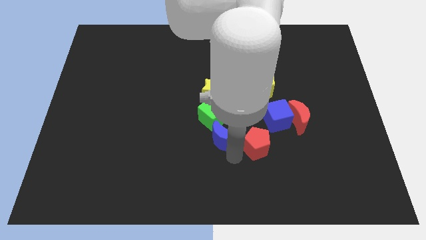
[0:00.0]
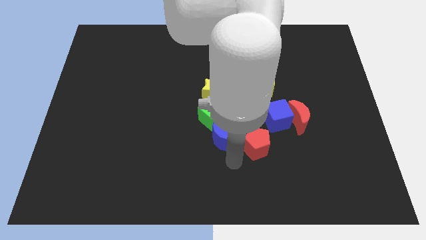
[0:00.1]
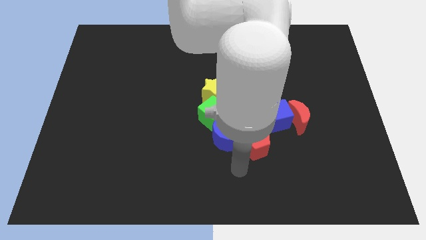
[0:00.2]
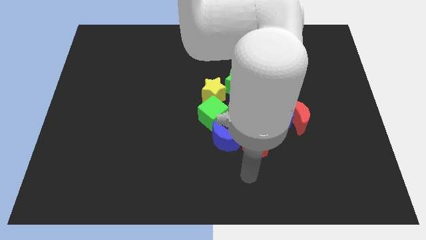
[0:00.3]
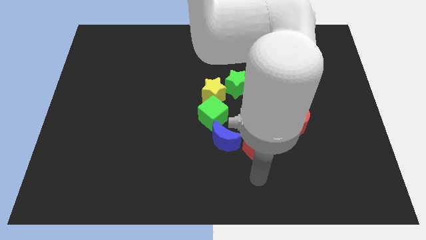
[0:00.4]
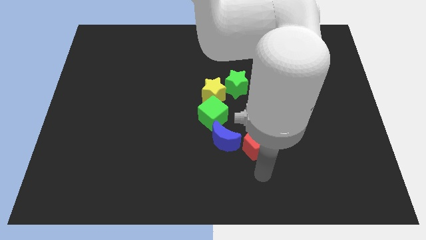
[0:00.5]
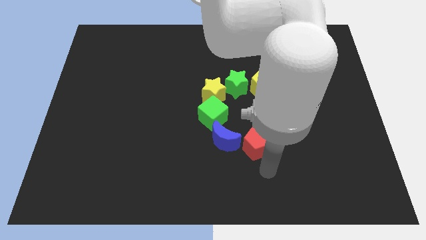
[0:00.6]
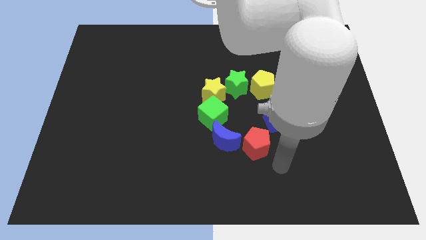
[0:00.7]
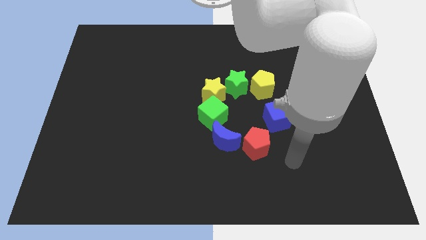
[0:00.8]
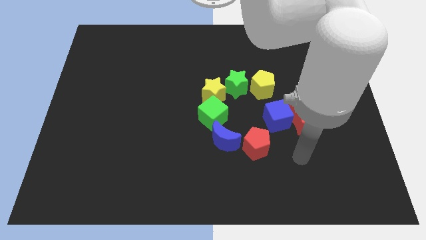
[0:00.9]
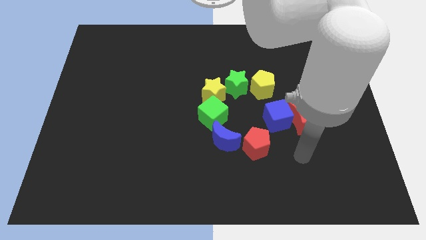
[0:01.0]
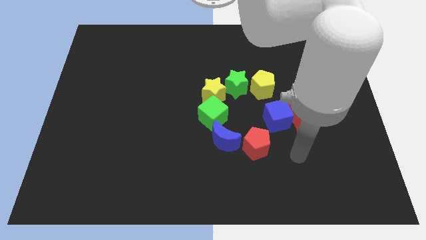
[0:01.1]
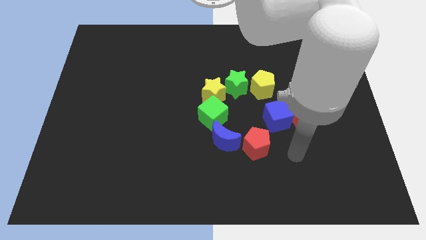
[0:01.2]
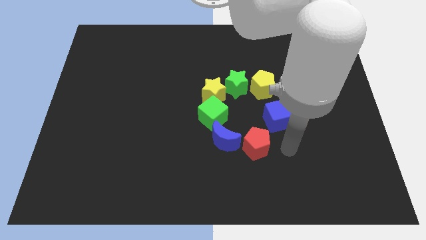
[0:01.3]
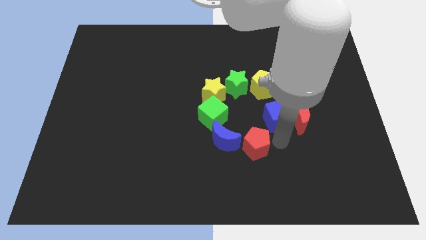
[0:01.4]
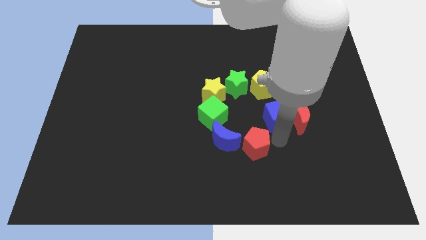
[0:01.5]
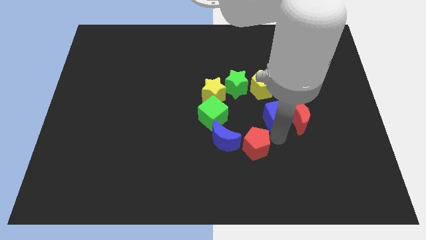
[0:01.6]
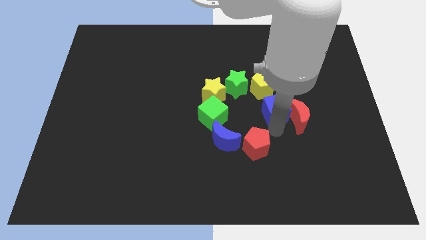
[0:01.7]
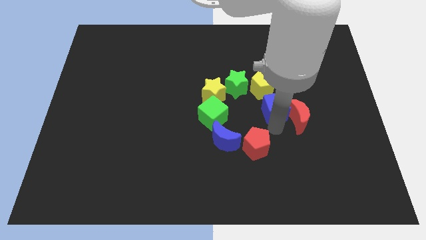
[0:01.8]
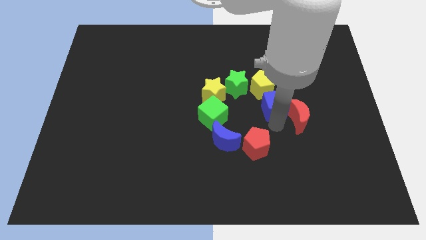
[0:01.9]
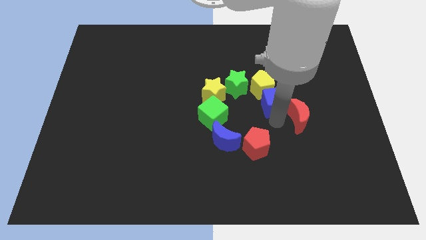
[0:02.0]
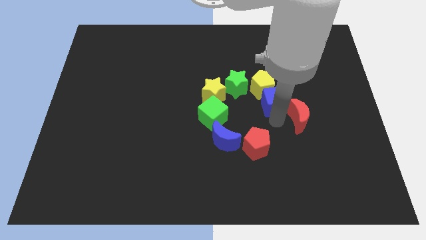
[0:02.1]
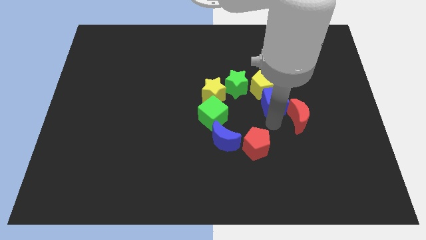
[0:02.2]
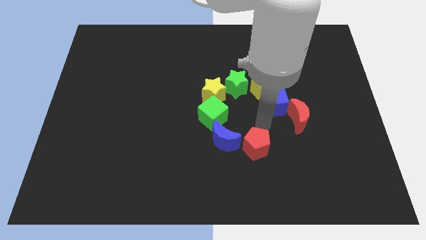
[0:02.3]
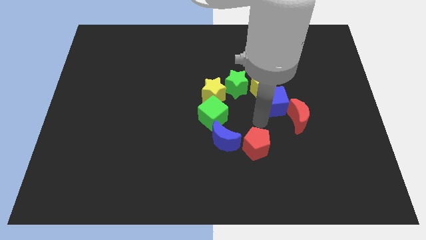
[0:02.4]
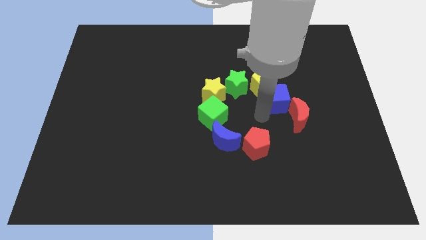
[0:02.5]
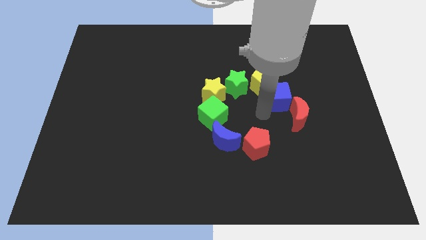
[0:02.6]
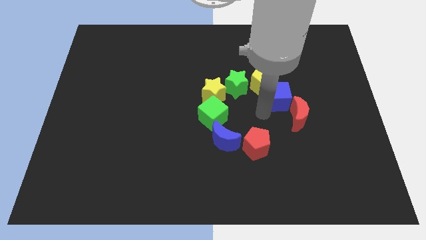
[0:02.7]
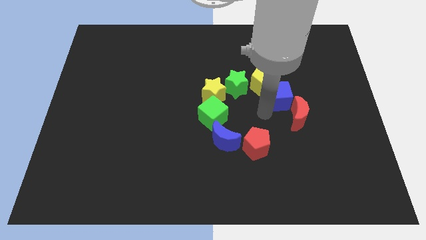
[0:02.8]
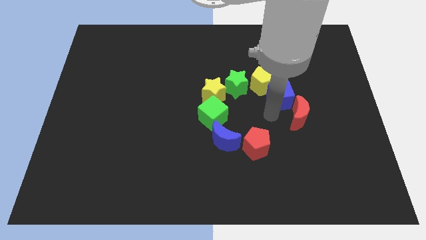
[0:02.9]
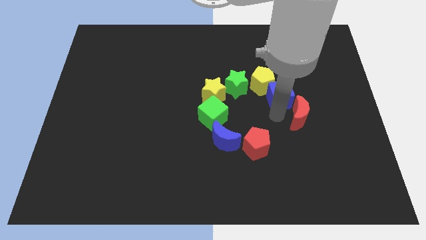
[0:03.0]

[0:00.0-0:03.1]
move the blue cube between the yellow pentagon and red moon

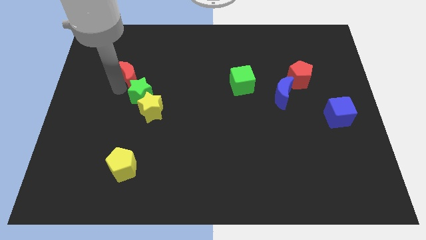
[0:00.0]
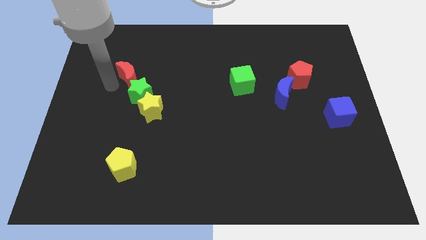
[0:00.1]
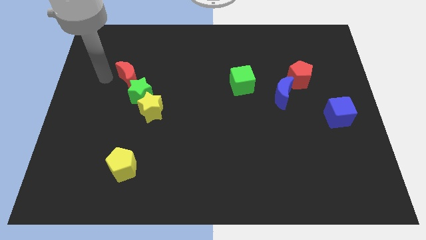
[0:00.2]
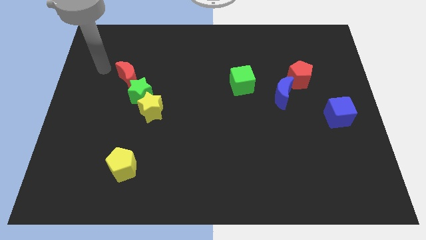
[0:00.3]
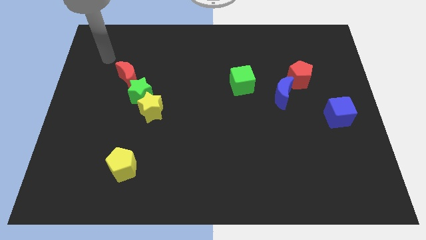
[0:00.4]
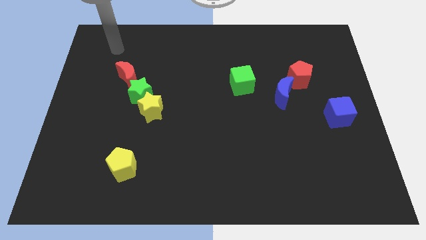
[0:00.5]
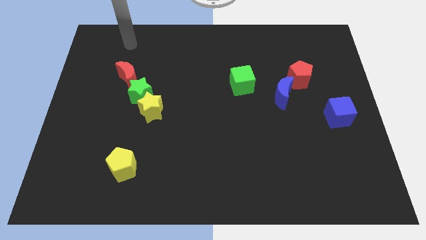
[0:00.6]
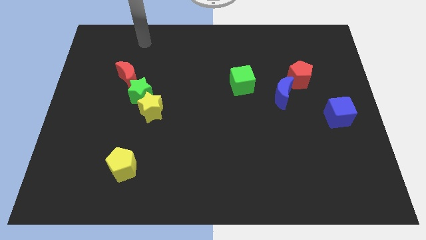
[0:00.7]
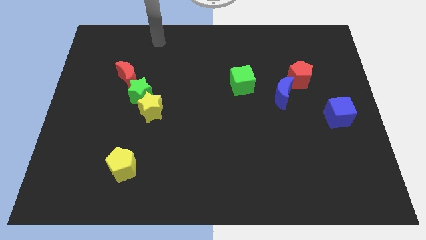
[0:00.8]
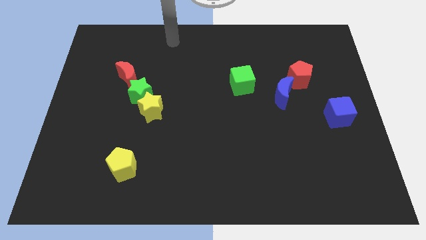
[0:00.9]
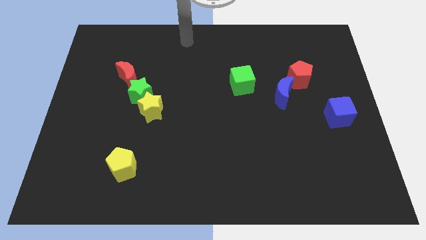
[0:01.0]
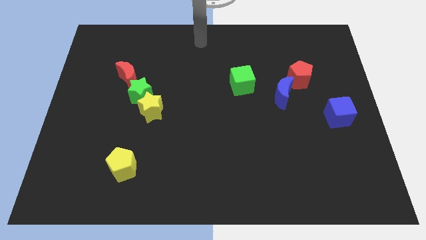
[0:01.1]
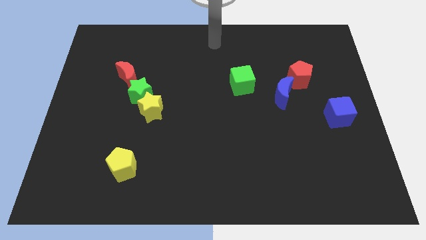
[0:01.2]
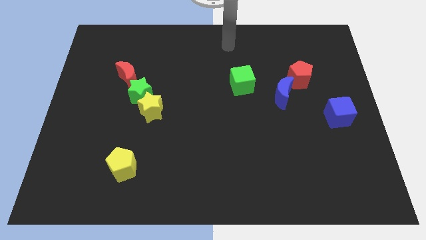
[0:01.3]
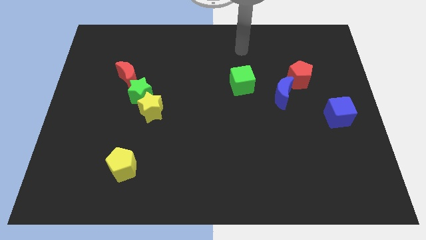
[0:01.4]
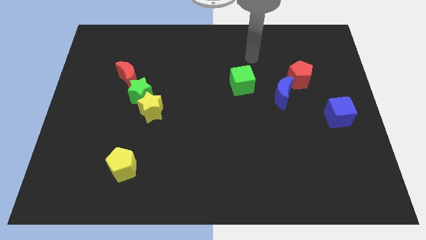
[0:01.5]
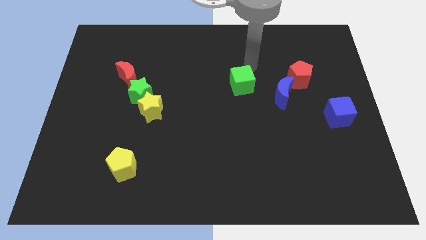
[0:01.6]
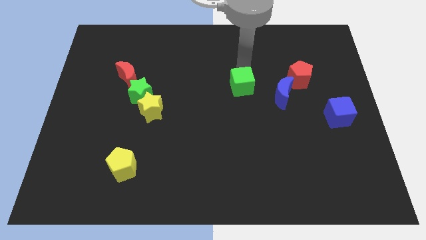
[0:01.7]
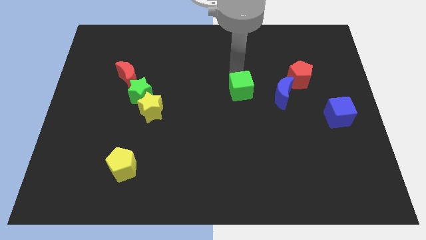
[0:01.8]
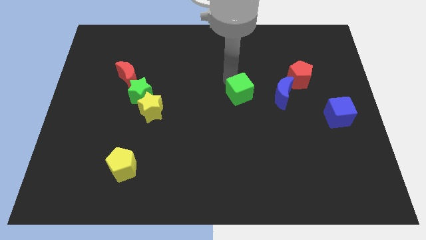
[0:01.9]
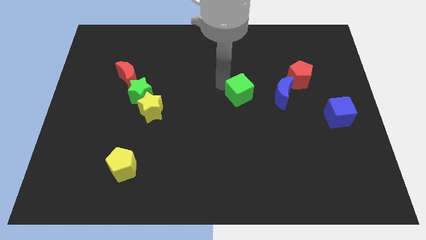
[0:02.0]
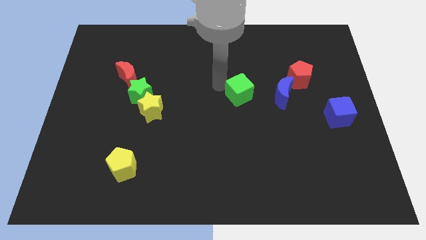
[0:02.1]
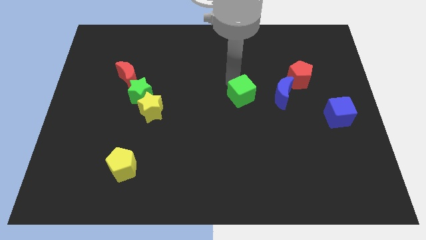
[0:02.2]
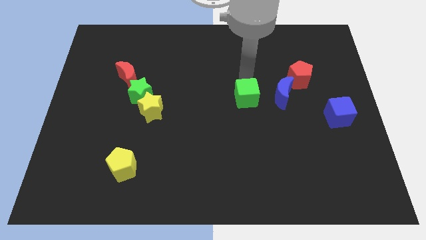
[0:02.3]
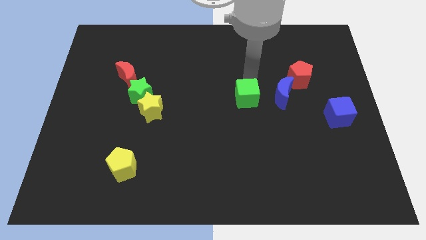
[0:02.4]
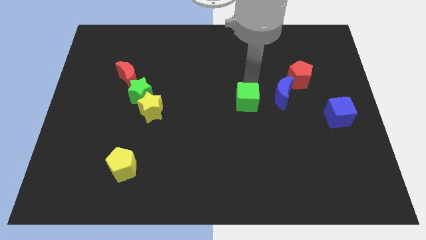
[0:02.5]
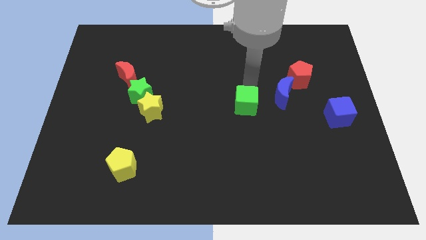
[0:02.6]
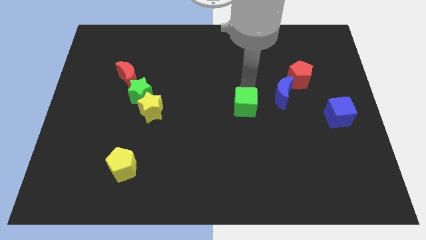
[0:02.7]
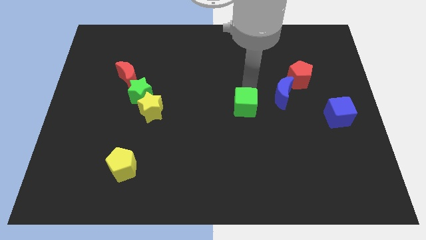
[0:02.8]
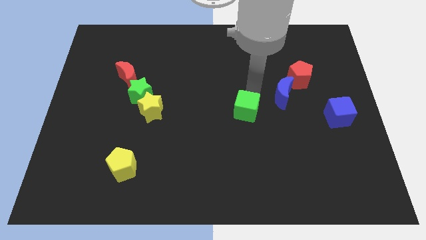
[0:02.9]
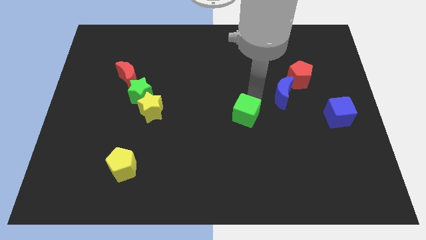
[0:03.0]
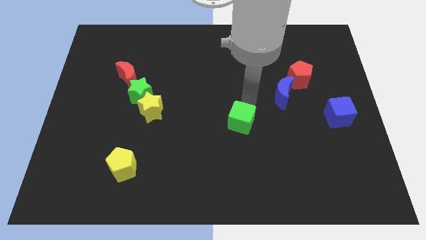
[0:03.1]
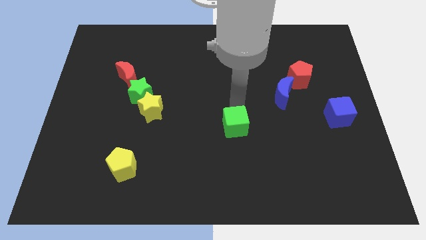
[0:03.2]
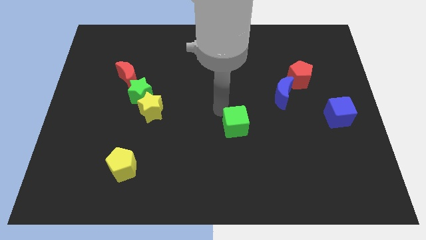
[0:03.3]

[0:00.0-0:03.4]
push the green cube towards the center of the board

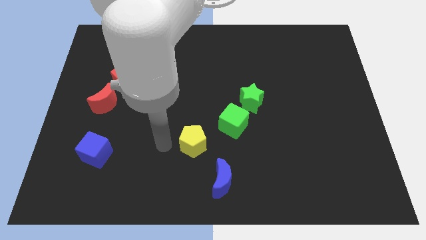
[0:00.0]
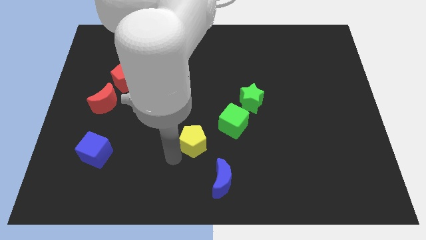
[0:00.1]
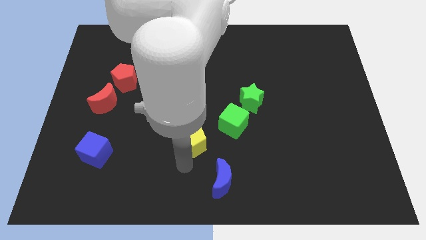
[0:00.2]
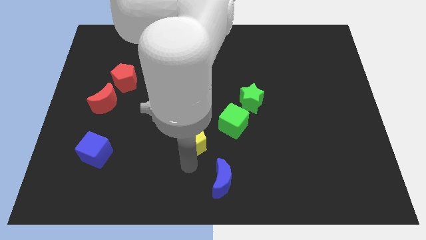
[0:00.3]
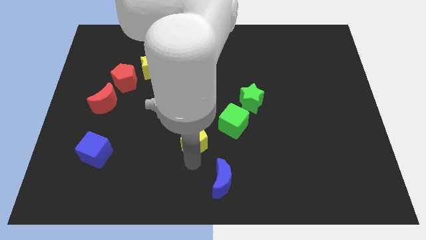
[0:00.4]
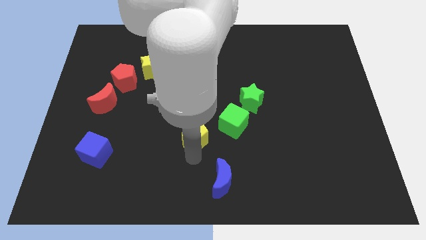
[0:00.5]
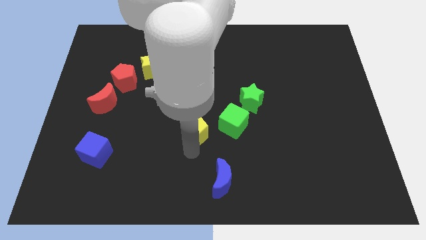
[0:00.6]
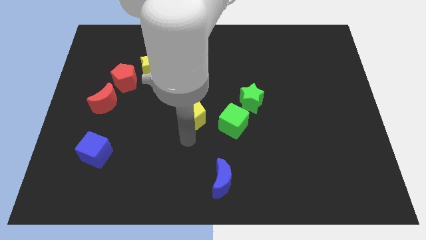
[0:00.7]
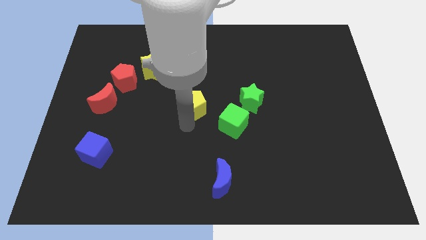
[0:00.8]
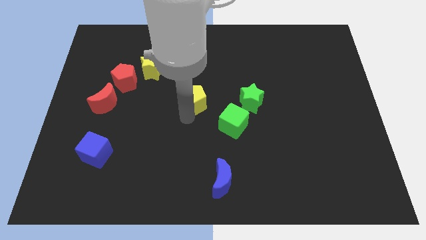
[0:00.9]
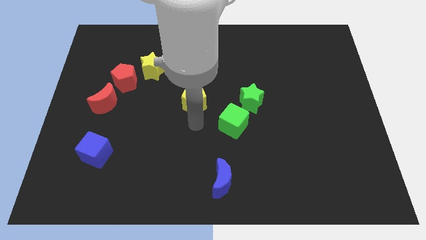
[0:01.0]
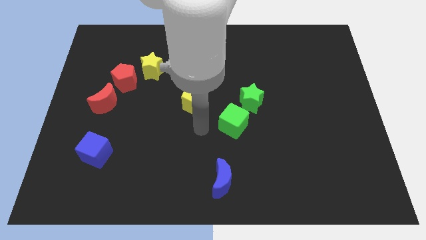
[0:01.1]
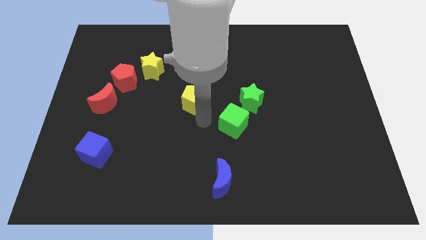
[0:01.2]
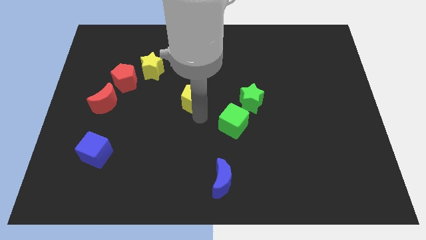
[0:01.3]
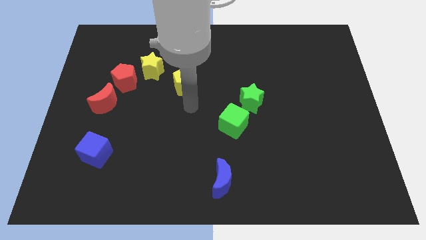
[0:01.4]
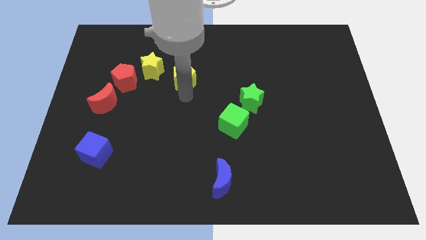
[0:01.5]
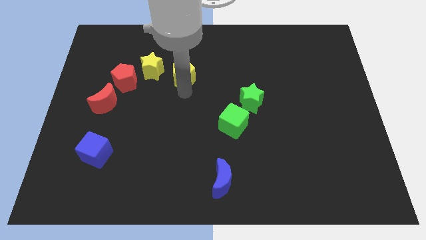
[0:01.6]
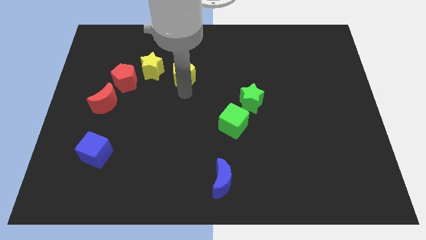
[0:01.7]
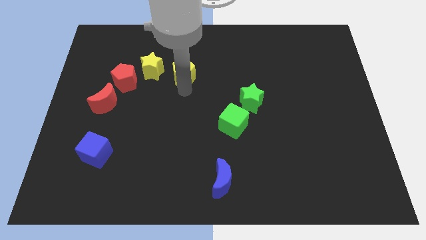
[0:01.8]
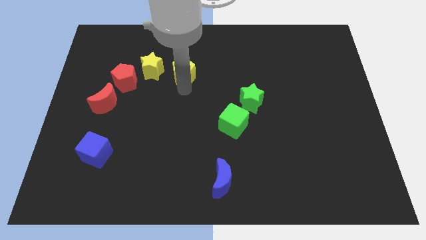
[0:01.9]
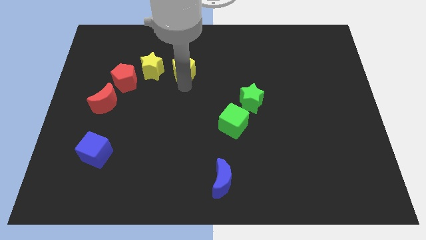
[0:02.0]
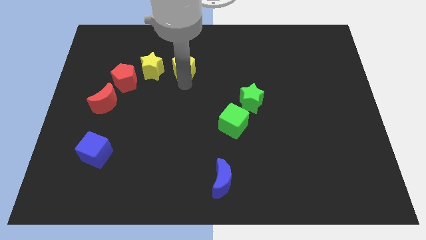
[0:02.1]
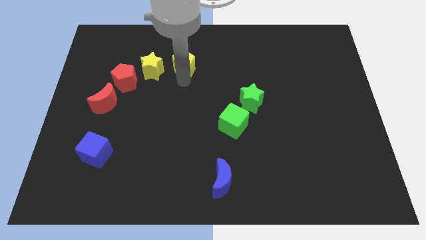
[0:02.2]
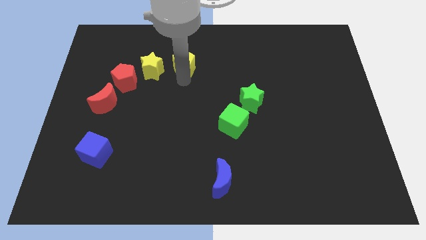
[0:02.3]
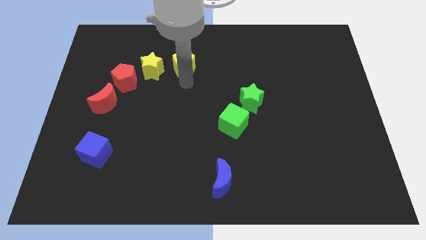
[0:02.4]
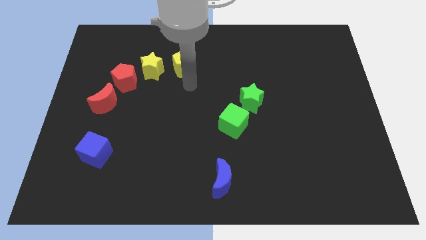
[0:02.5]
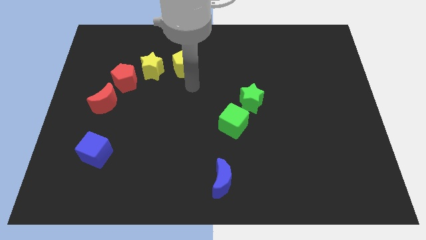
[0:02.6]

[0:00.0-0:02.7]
move the yellow pentagon towards the right to the yellow star
